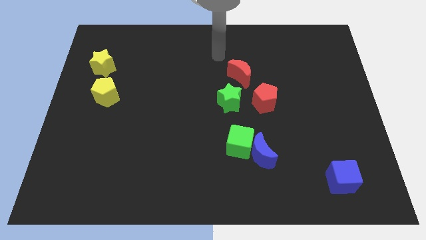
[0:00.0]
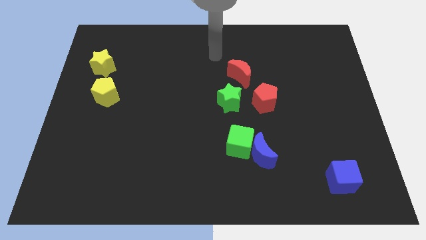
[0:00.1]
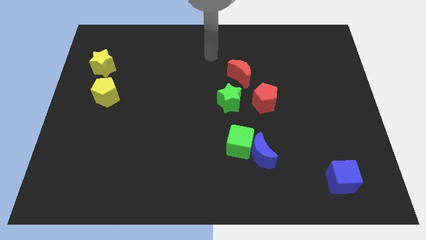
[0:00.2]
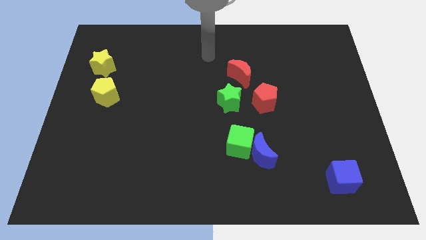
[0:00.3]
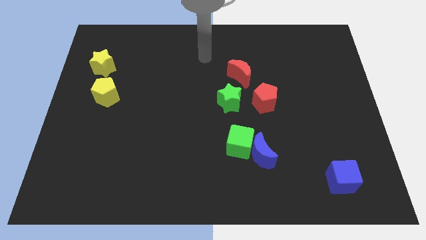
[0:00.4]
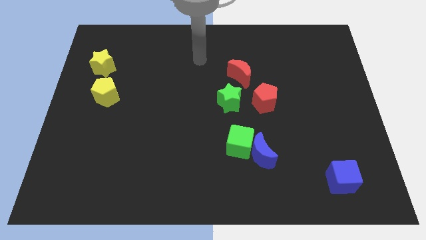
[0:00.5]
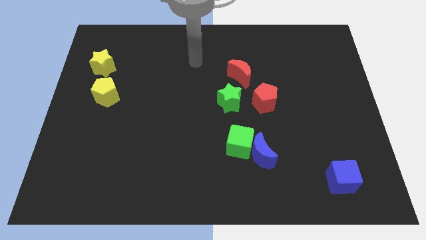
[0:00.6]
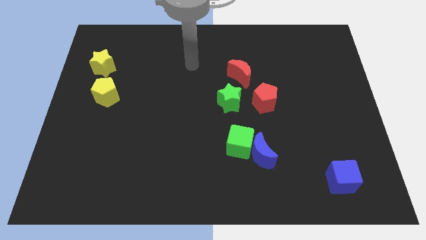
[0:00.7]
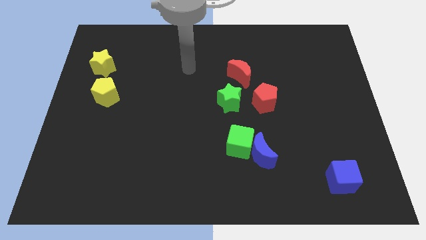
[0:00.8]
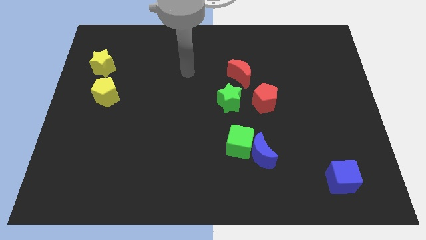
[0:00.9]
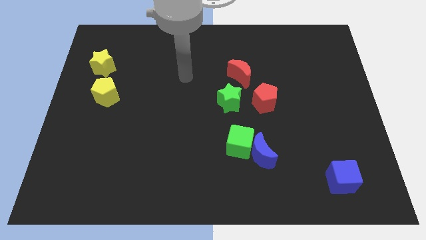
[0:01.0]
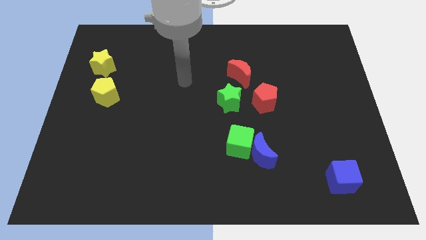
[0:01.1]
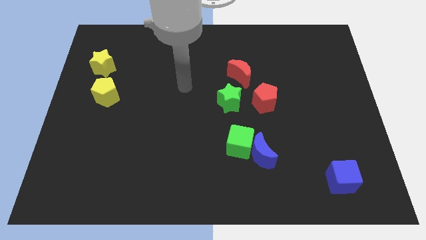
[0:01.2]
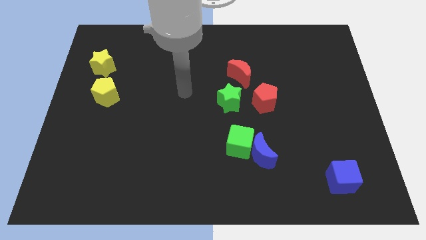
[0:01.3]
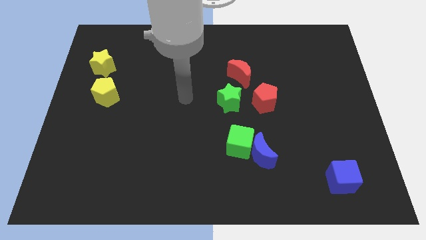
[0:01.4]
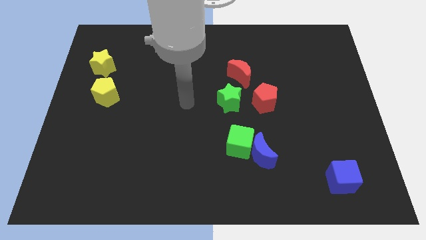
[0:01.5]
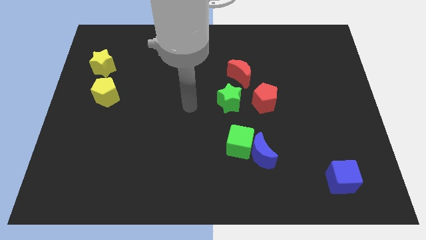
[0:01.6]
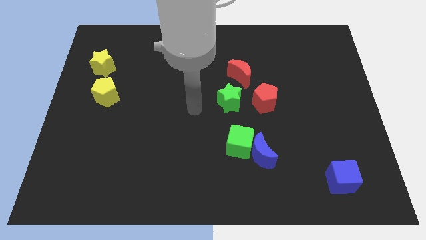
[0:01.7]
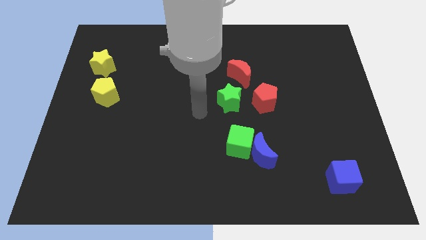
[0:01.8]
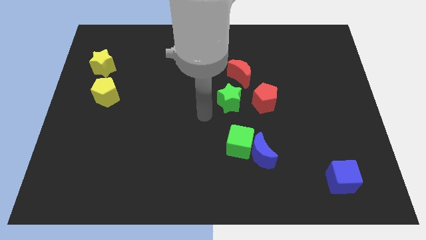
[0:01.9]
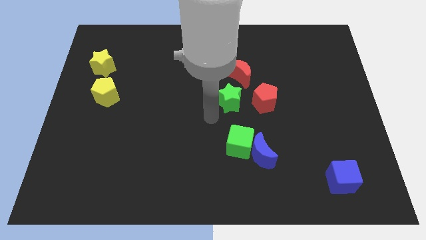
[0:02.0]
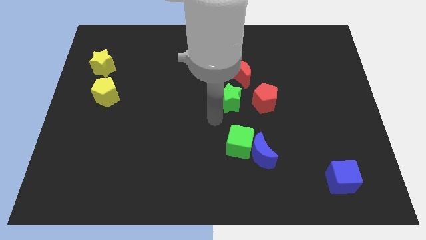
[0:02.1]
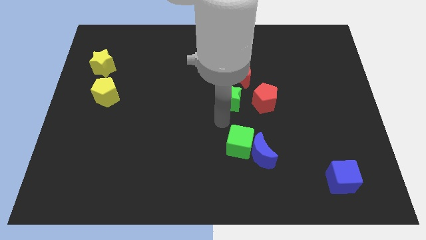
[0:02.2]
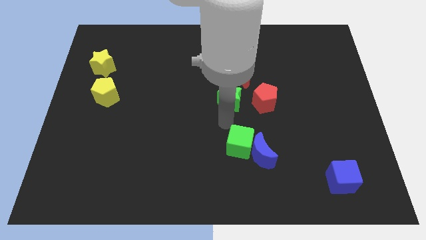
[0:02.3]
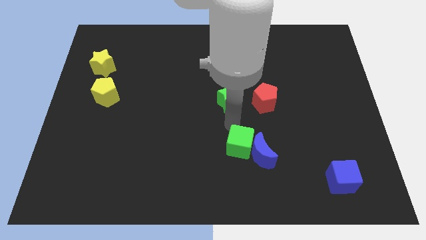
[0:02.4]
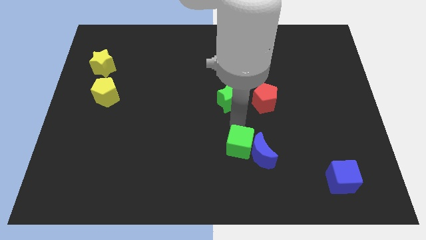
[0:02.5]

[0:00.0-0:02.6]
point your arm at the top of the green cube

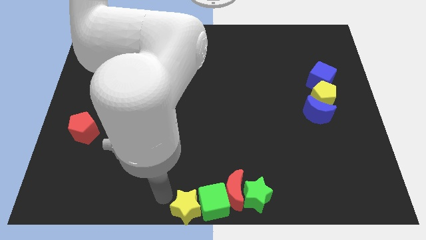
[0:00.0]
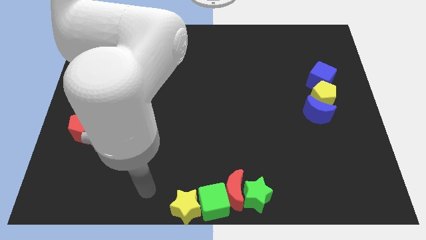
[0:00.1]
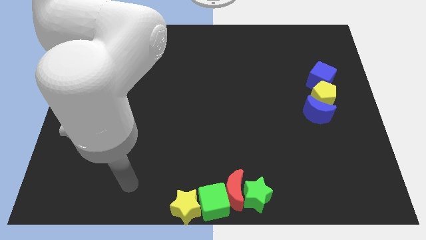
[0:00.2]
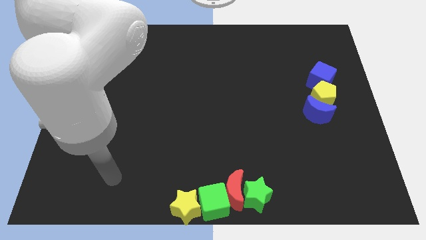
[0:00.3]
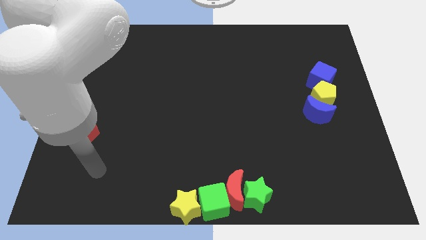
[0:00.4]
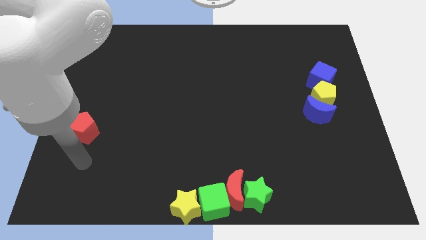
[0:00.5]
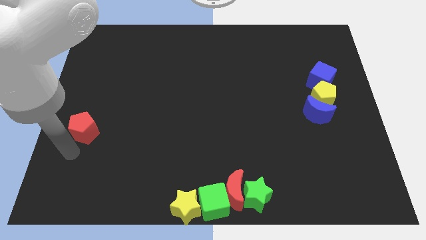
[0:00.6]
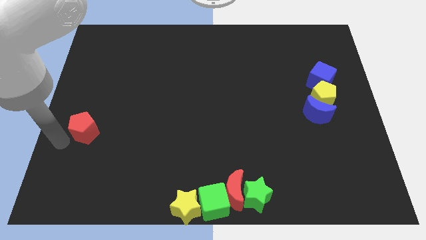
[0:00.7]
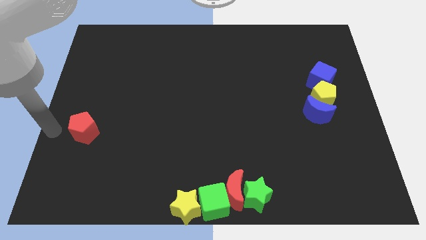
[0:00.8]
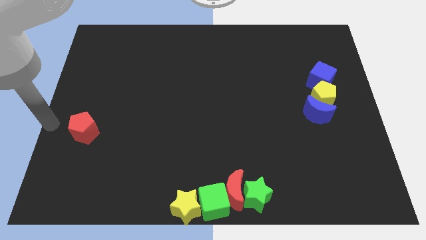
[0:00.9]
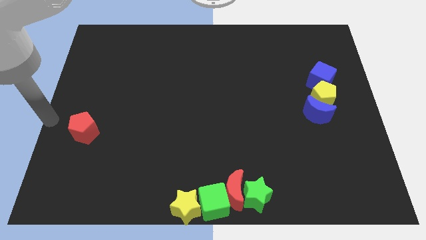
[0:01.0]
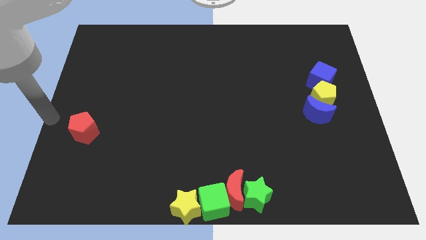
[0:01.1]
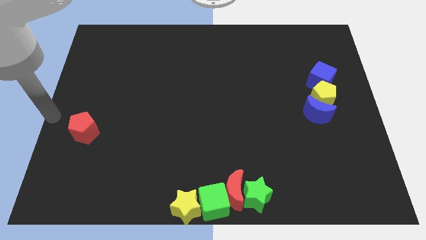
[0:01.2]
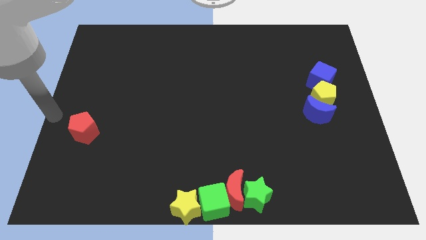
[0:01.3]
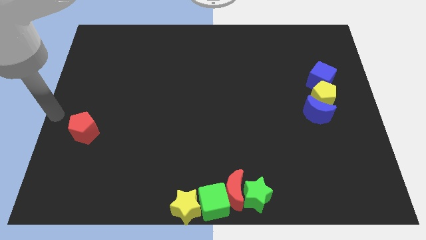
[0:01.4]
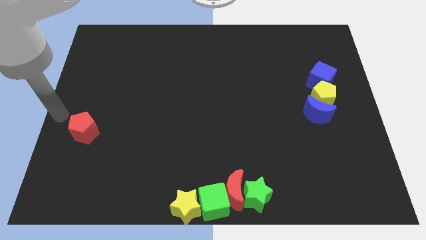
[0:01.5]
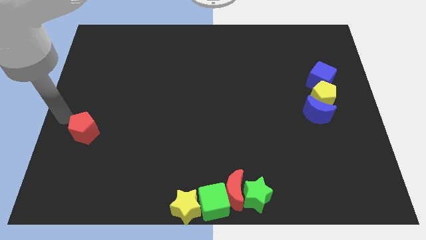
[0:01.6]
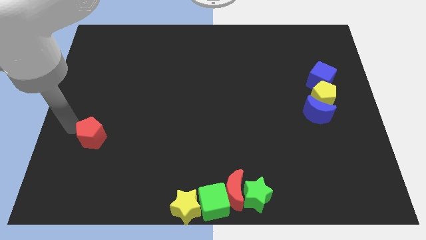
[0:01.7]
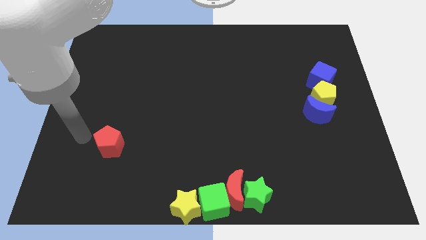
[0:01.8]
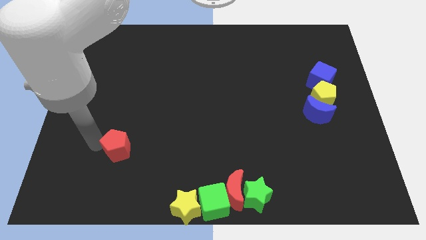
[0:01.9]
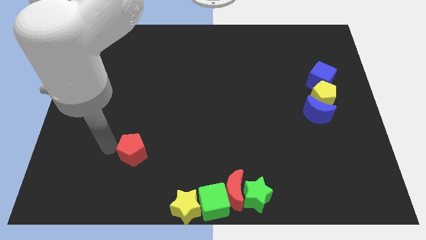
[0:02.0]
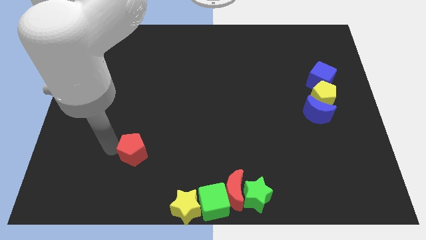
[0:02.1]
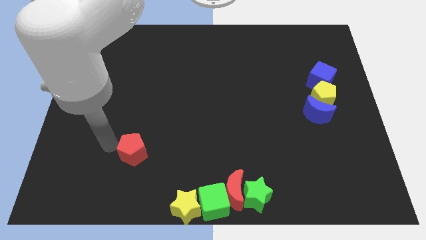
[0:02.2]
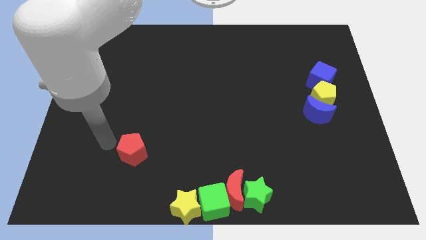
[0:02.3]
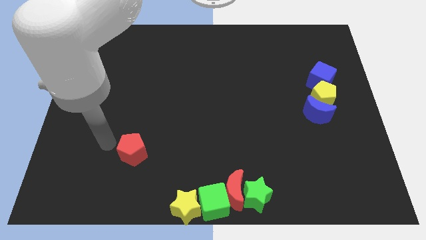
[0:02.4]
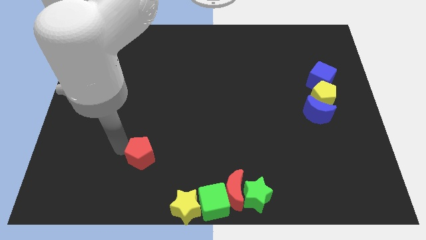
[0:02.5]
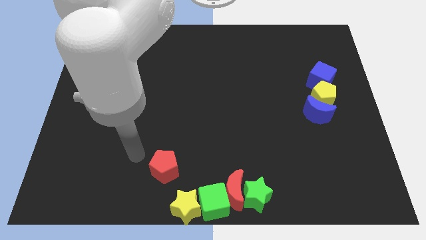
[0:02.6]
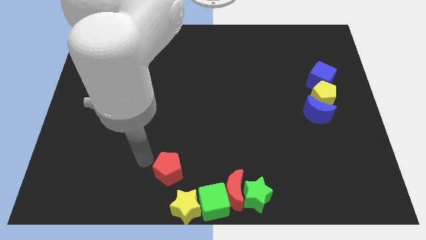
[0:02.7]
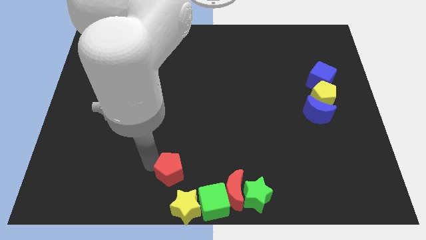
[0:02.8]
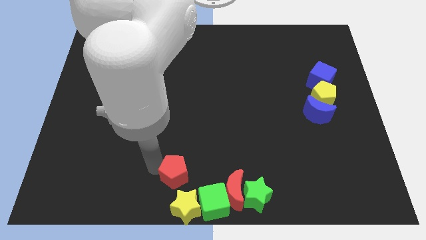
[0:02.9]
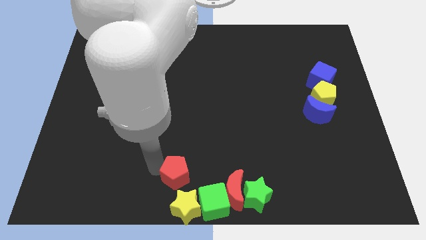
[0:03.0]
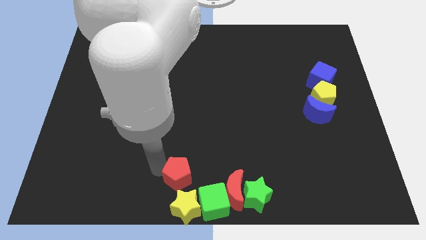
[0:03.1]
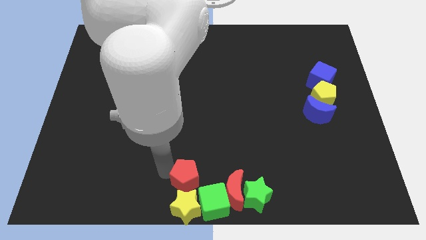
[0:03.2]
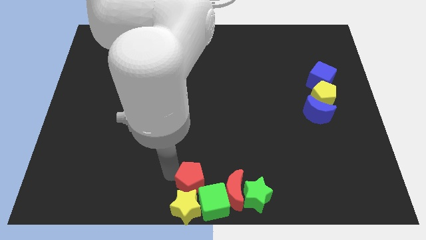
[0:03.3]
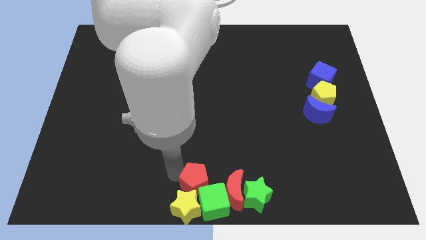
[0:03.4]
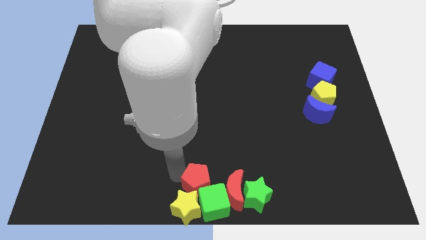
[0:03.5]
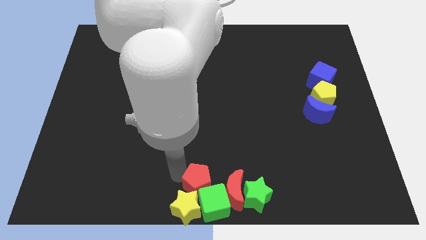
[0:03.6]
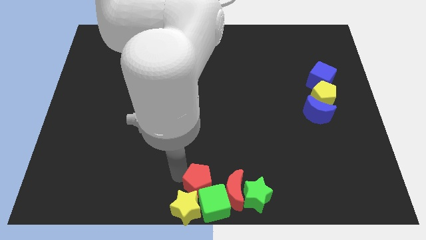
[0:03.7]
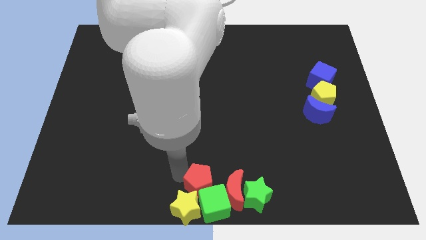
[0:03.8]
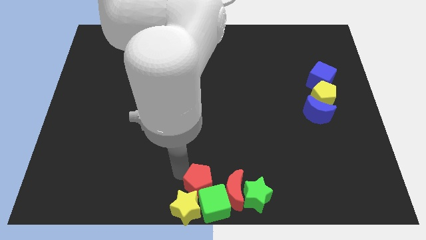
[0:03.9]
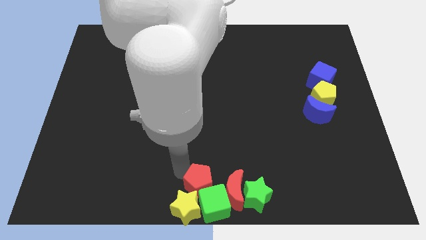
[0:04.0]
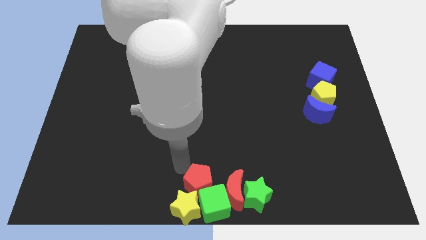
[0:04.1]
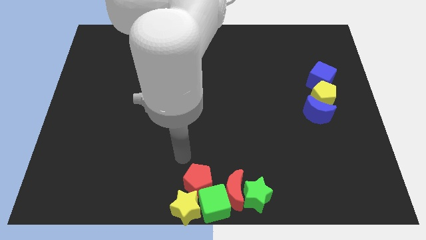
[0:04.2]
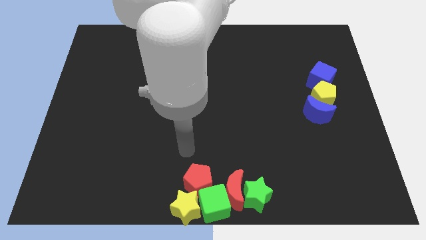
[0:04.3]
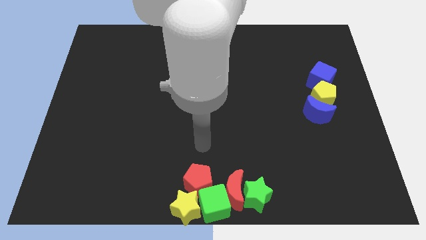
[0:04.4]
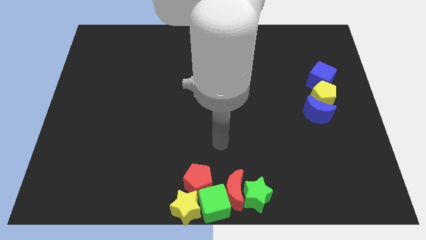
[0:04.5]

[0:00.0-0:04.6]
place the red pentagon at the bottom center

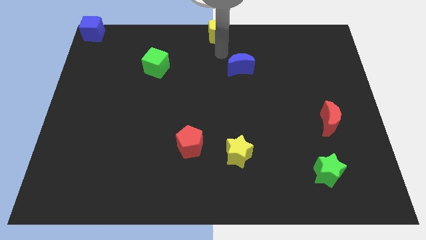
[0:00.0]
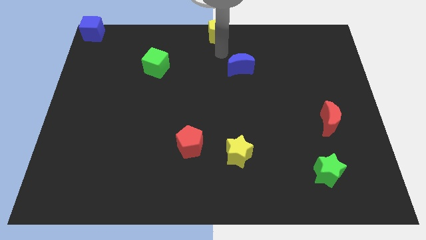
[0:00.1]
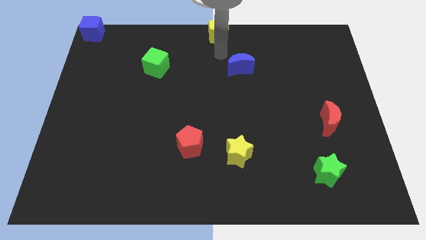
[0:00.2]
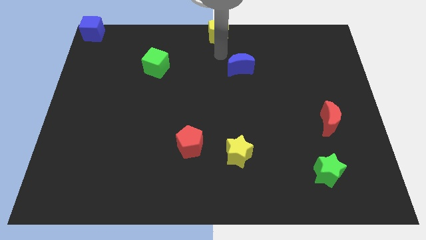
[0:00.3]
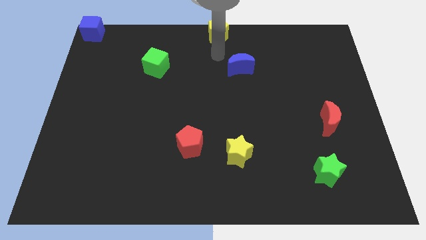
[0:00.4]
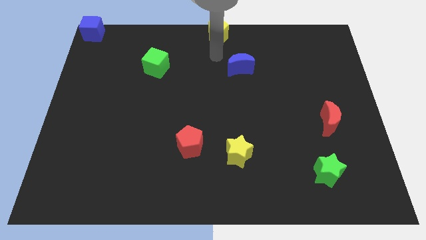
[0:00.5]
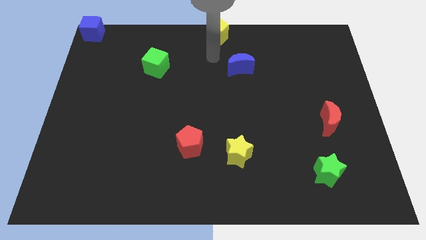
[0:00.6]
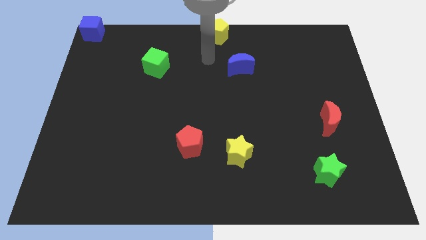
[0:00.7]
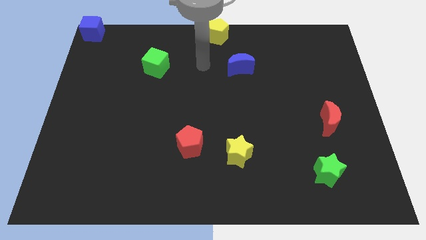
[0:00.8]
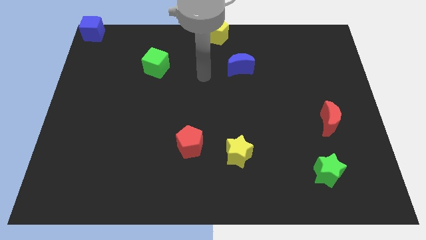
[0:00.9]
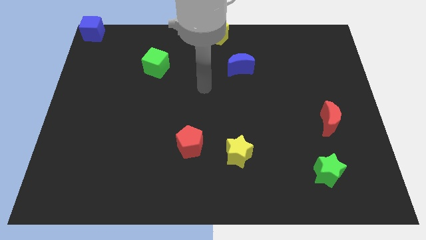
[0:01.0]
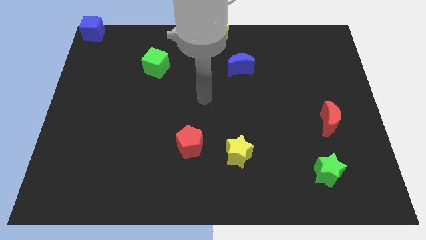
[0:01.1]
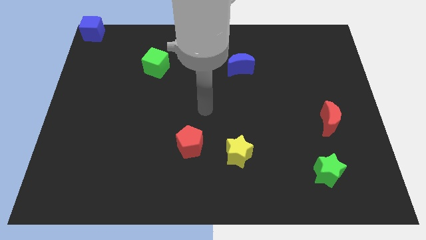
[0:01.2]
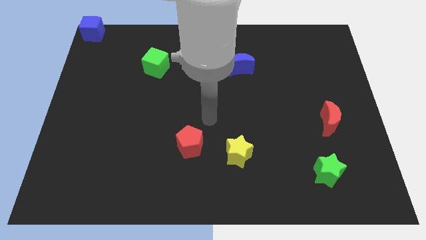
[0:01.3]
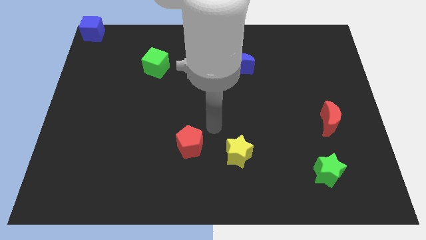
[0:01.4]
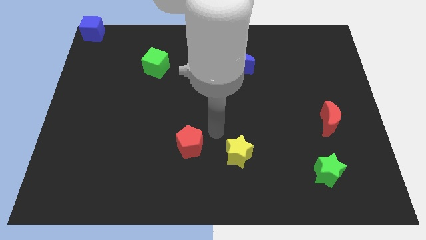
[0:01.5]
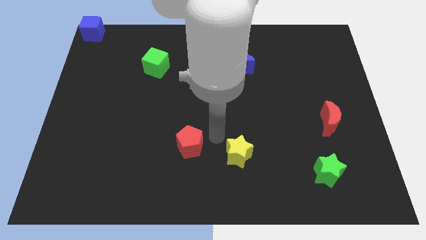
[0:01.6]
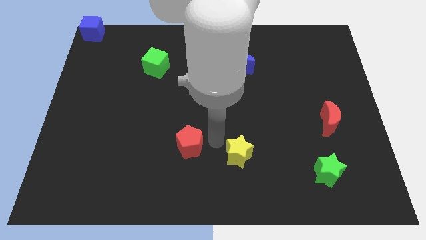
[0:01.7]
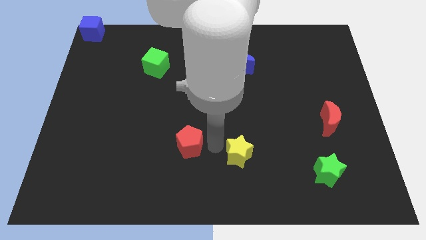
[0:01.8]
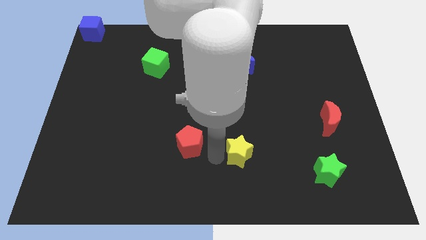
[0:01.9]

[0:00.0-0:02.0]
place your arm in between the yellow star and red pentagon
